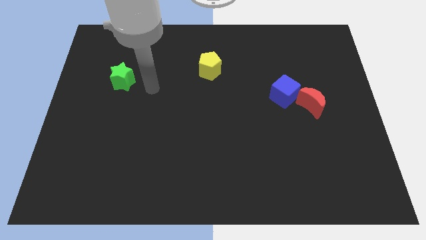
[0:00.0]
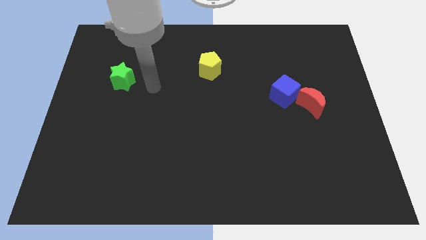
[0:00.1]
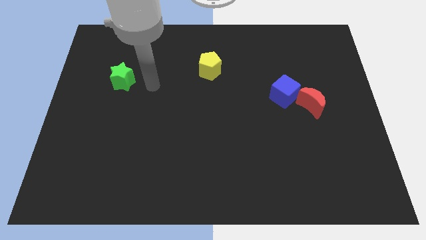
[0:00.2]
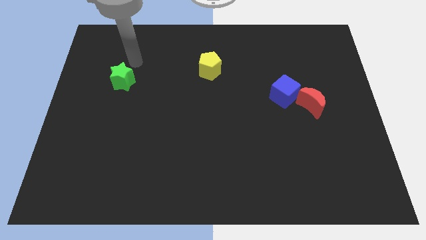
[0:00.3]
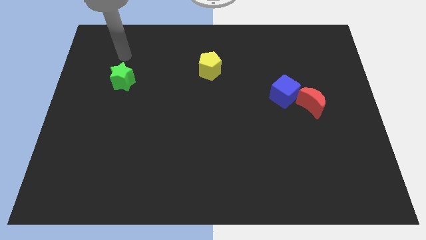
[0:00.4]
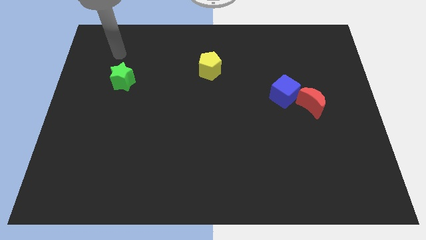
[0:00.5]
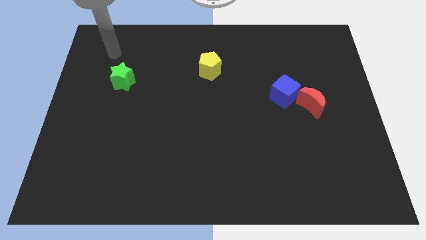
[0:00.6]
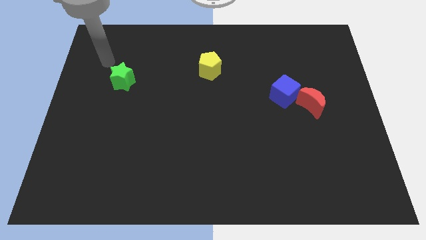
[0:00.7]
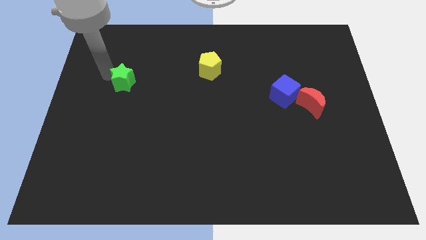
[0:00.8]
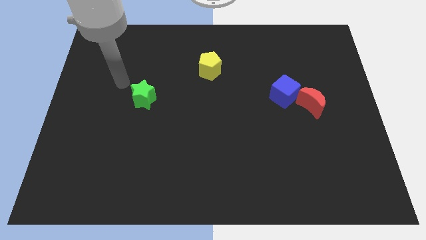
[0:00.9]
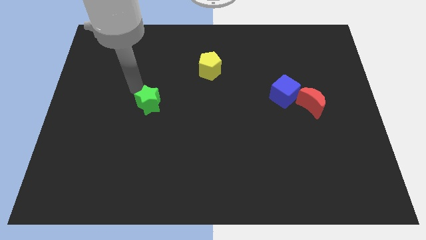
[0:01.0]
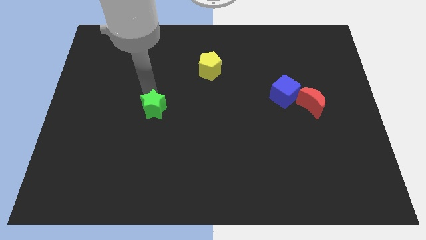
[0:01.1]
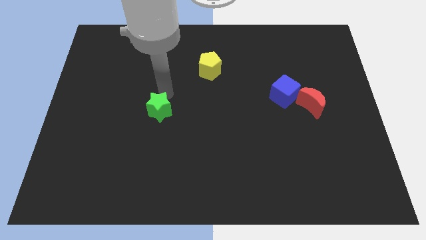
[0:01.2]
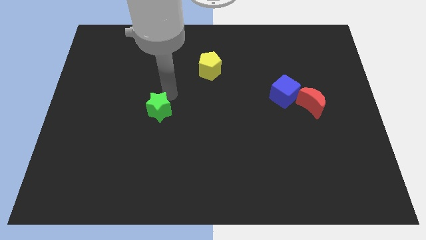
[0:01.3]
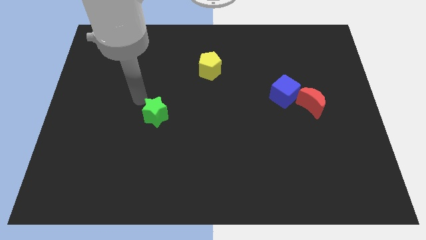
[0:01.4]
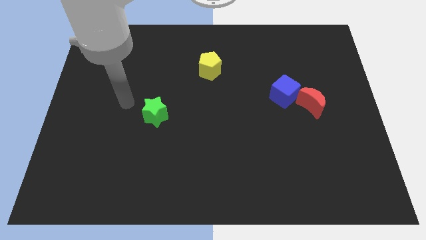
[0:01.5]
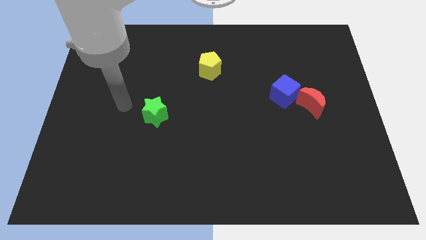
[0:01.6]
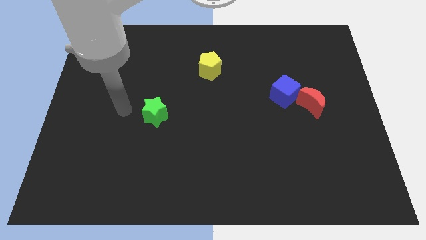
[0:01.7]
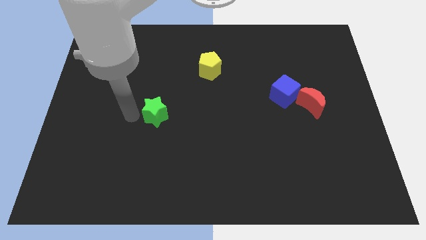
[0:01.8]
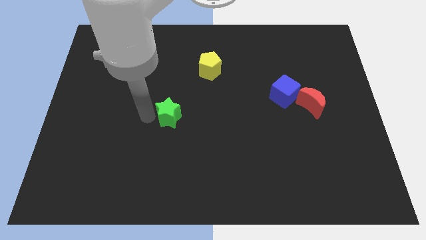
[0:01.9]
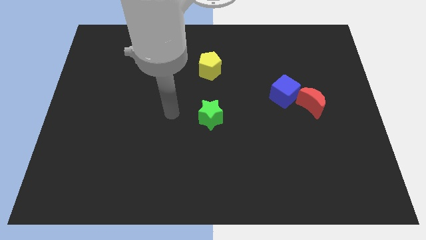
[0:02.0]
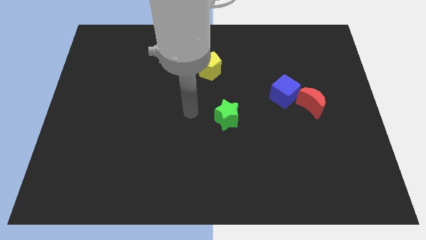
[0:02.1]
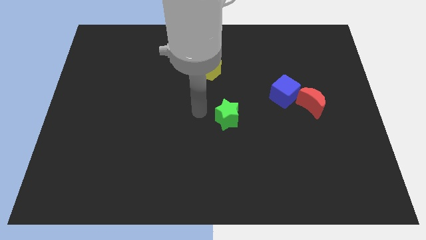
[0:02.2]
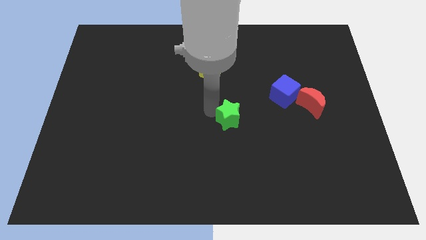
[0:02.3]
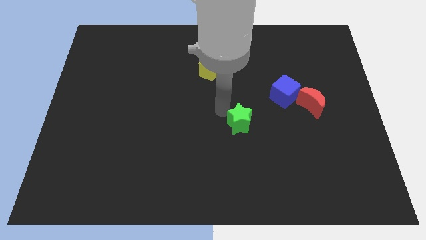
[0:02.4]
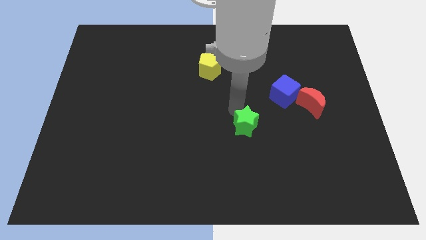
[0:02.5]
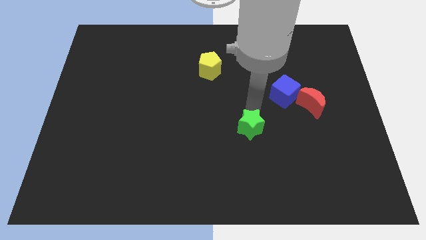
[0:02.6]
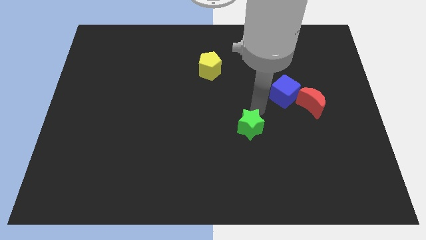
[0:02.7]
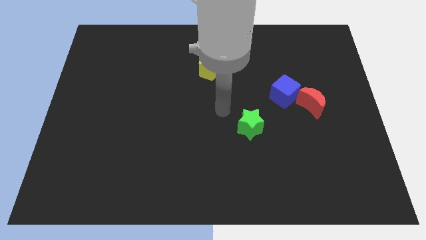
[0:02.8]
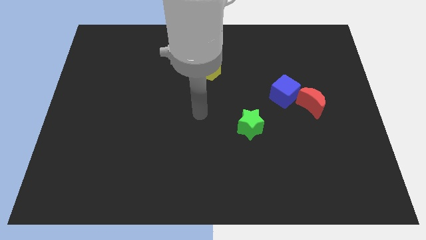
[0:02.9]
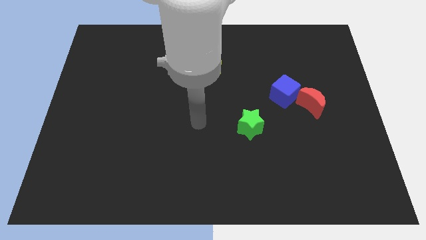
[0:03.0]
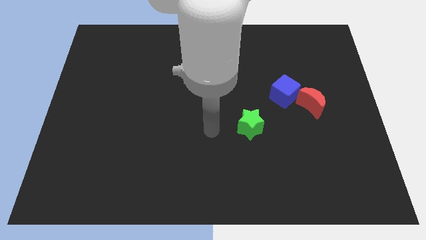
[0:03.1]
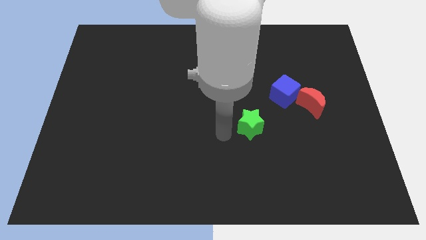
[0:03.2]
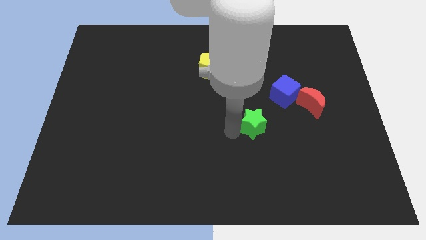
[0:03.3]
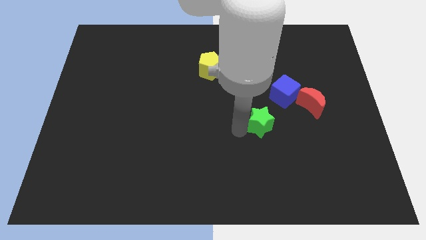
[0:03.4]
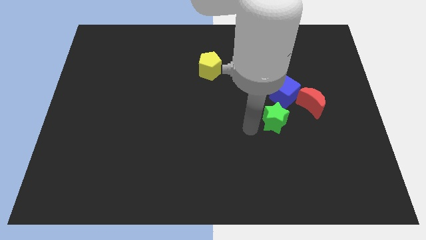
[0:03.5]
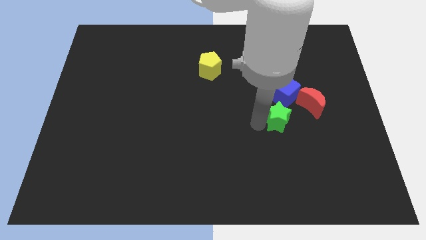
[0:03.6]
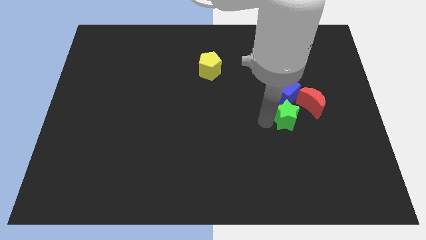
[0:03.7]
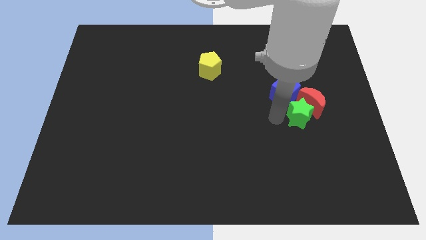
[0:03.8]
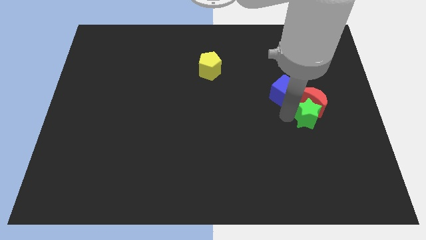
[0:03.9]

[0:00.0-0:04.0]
move the green block next to the moon

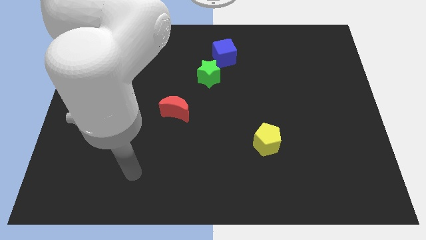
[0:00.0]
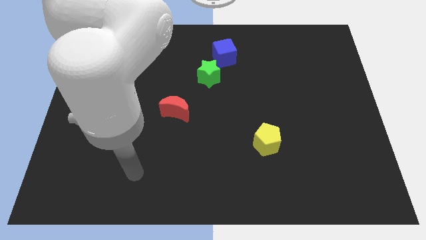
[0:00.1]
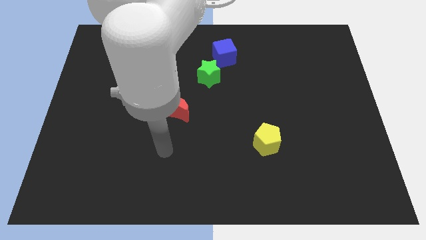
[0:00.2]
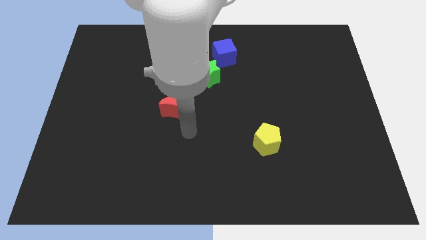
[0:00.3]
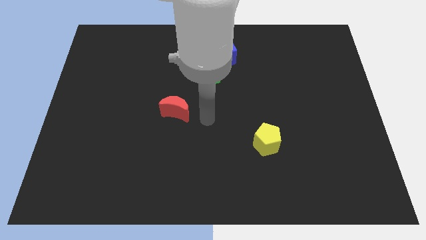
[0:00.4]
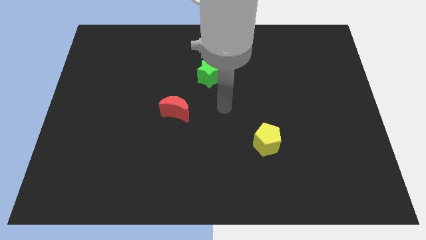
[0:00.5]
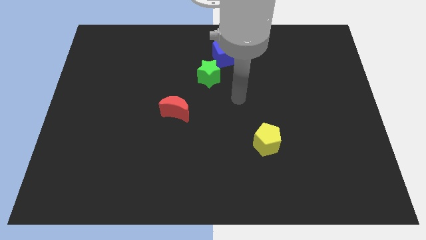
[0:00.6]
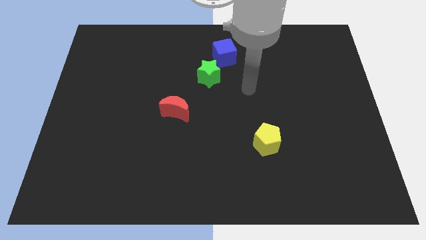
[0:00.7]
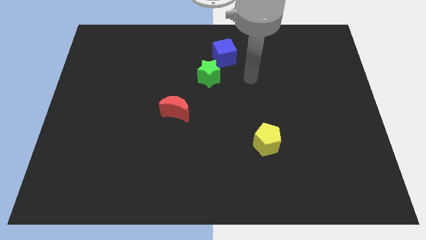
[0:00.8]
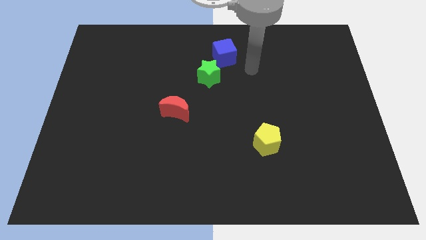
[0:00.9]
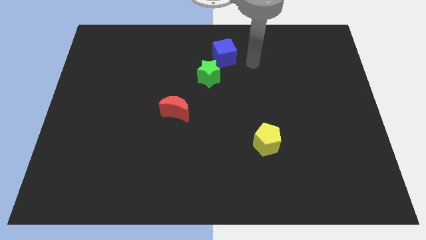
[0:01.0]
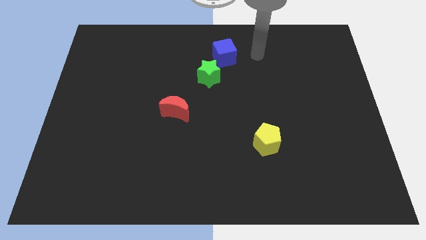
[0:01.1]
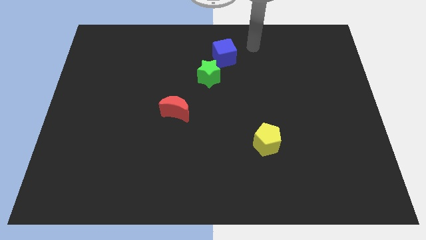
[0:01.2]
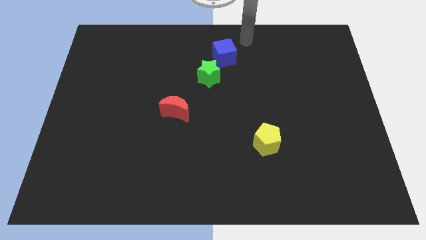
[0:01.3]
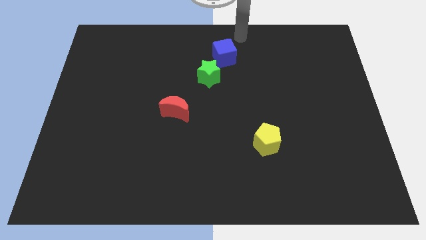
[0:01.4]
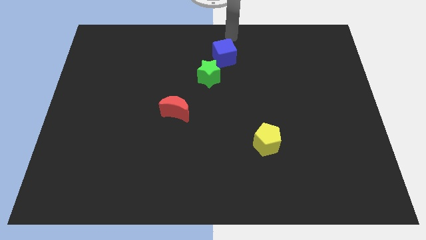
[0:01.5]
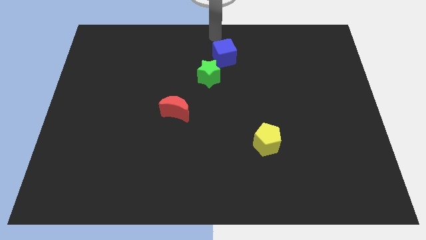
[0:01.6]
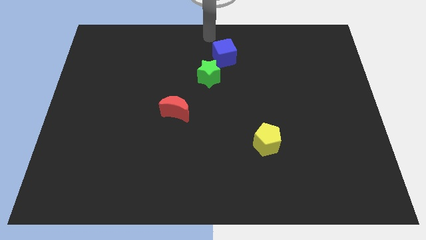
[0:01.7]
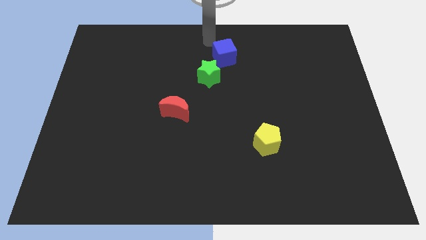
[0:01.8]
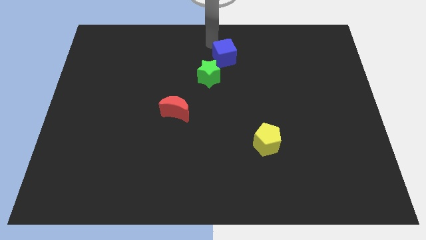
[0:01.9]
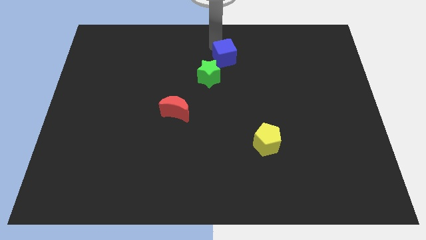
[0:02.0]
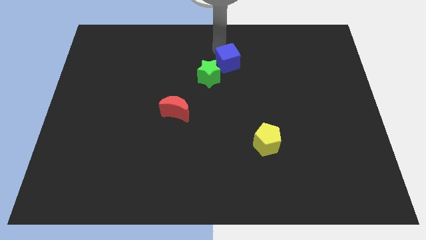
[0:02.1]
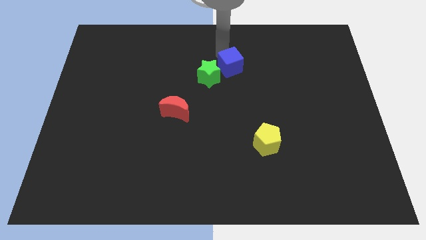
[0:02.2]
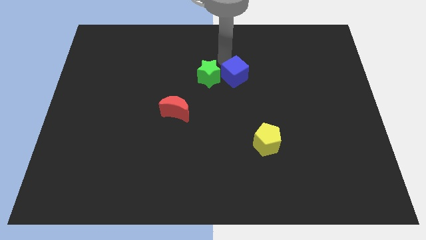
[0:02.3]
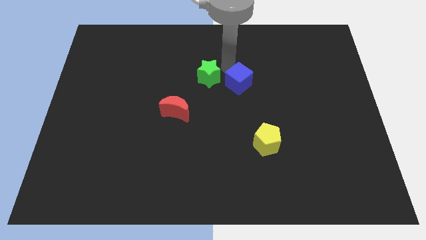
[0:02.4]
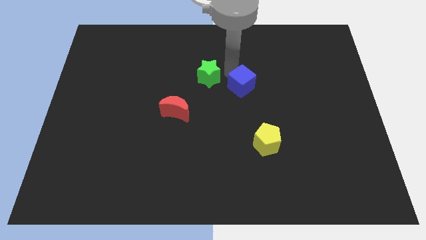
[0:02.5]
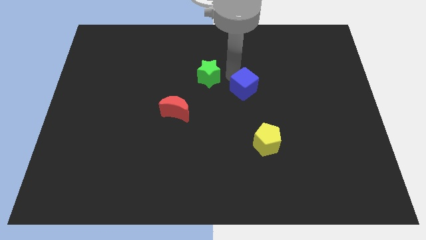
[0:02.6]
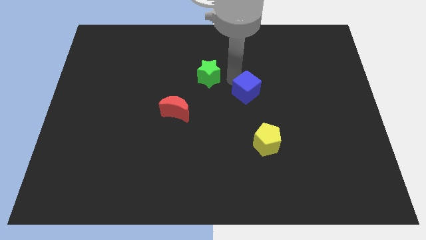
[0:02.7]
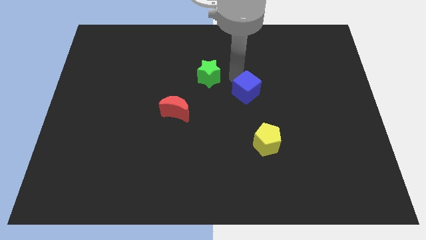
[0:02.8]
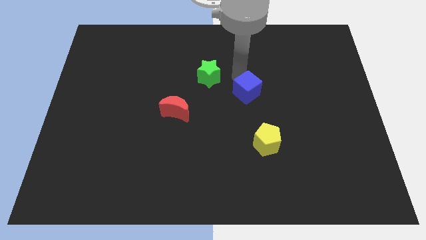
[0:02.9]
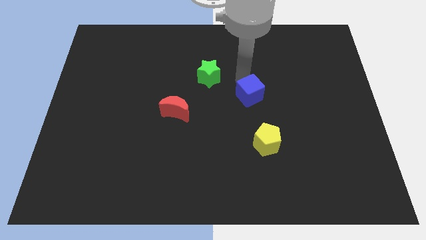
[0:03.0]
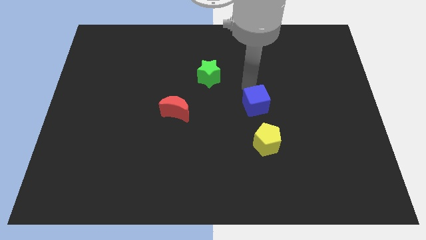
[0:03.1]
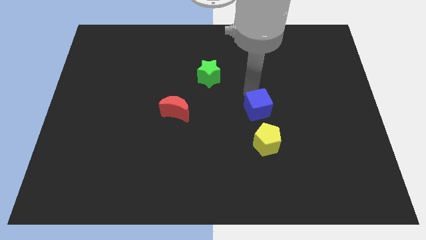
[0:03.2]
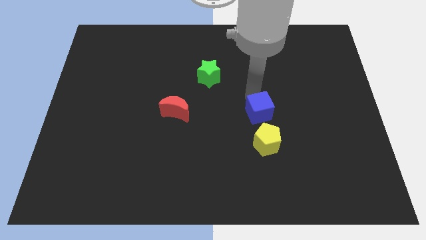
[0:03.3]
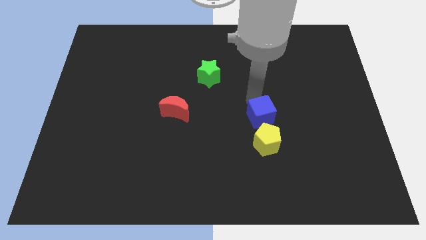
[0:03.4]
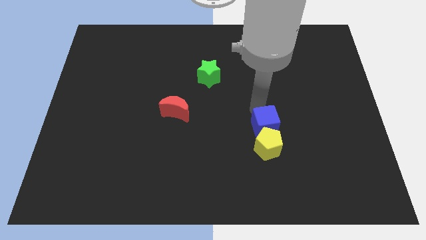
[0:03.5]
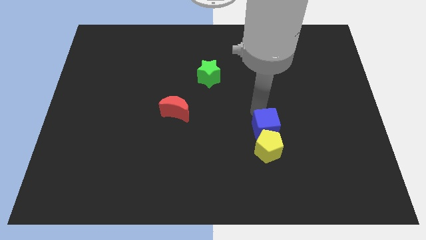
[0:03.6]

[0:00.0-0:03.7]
put the blue block close to the yellow pentagon

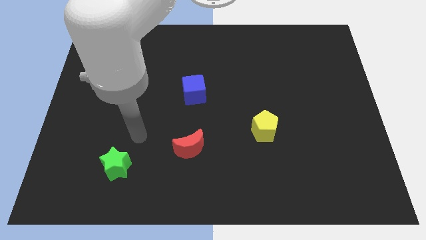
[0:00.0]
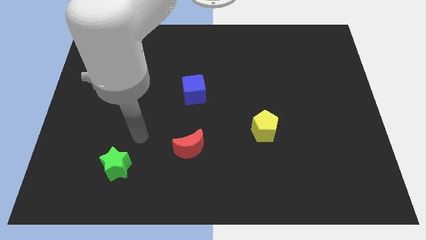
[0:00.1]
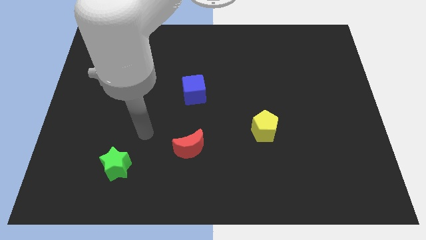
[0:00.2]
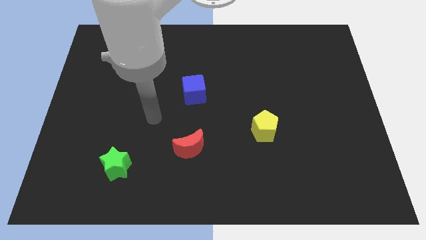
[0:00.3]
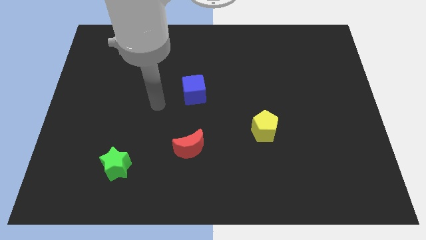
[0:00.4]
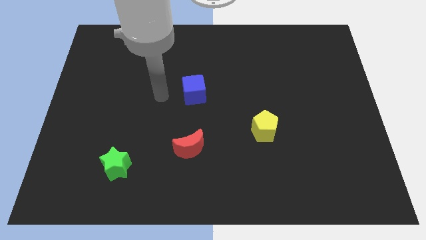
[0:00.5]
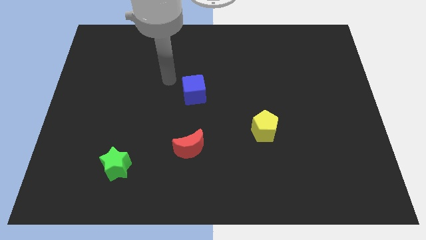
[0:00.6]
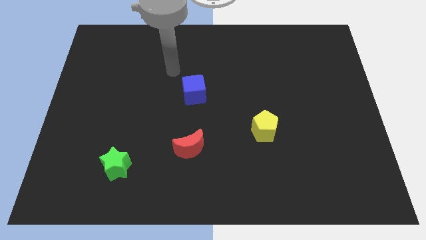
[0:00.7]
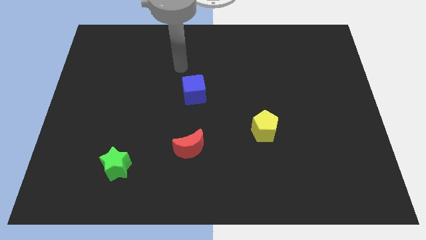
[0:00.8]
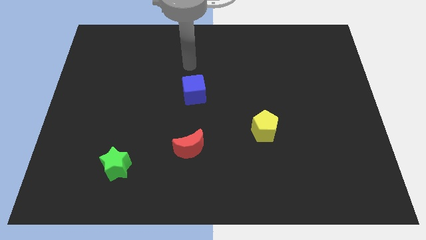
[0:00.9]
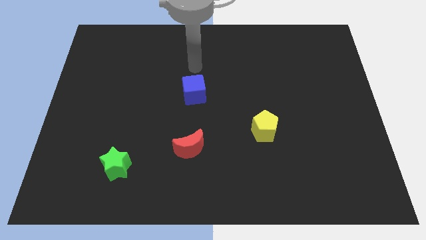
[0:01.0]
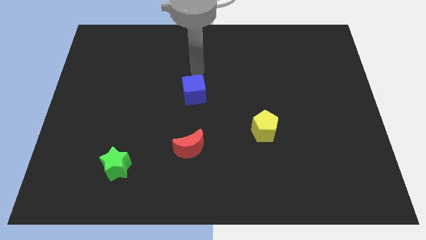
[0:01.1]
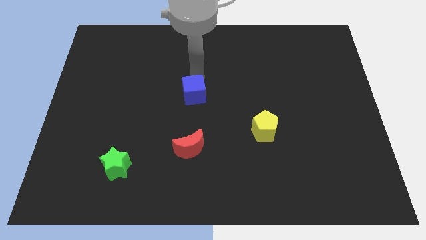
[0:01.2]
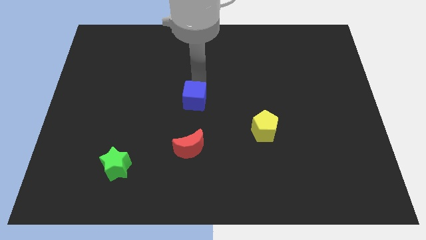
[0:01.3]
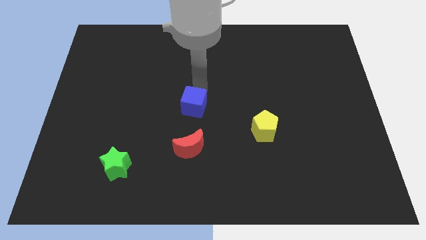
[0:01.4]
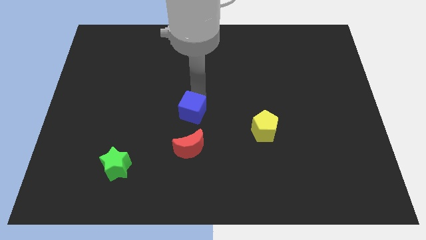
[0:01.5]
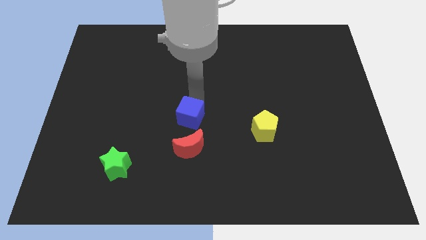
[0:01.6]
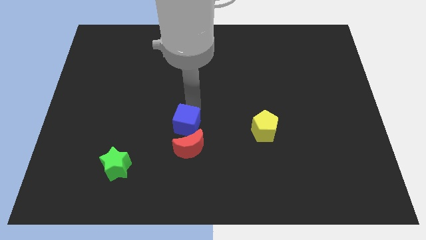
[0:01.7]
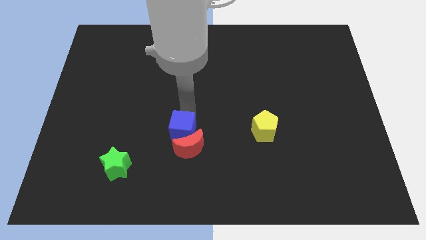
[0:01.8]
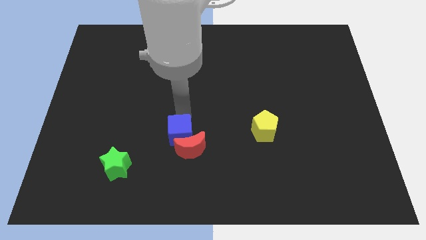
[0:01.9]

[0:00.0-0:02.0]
move the cube to the red moon
